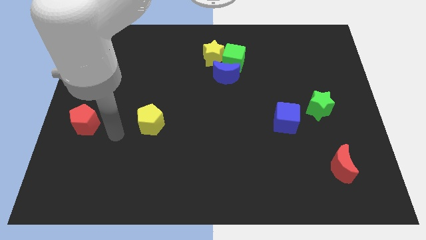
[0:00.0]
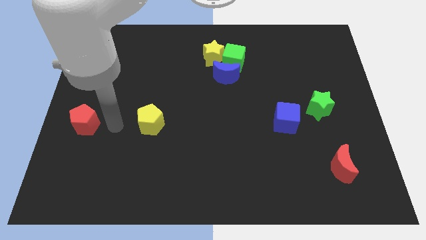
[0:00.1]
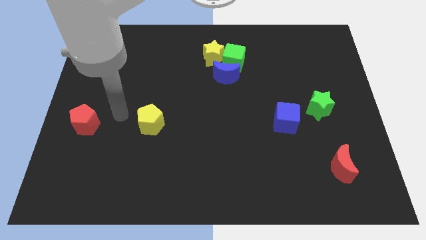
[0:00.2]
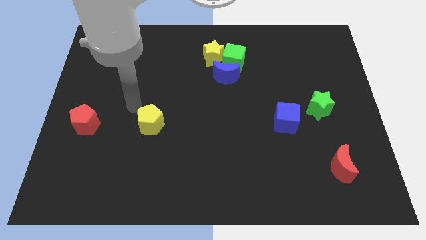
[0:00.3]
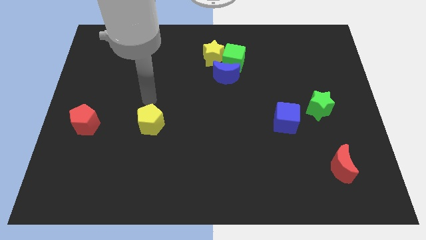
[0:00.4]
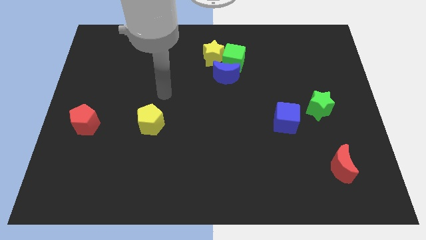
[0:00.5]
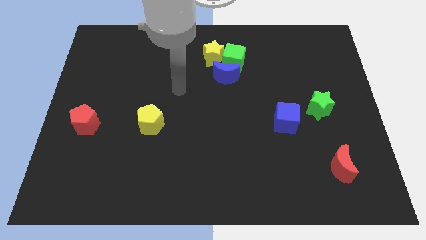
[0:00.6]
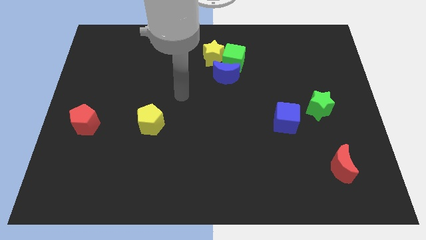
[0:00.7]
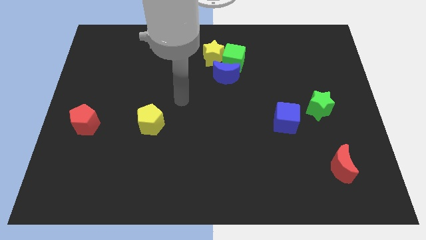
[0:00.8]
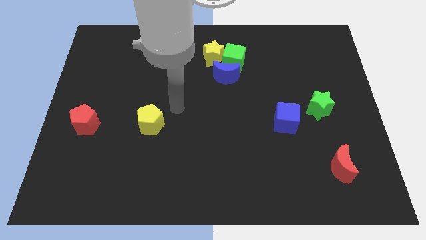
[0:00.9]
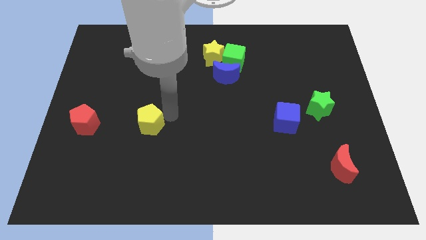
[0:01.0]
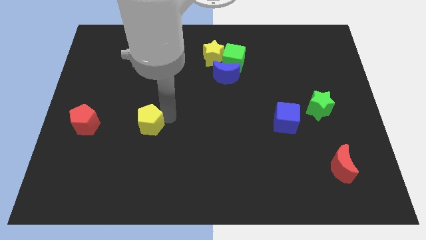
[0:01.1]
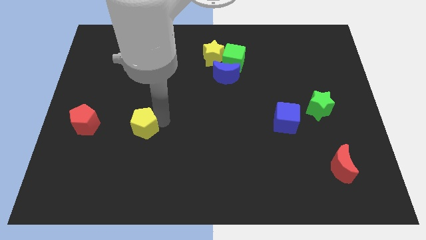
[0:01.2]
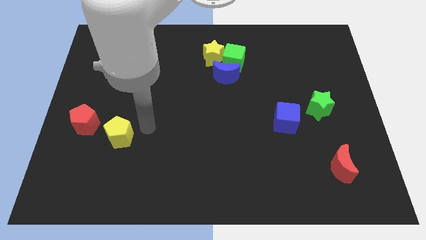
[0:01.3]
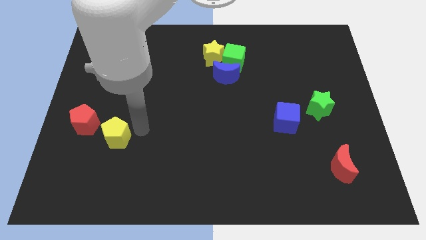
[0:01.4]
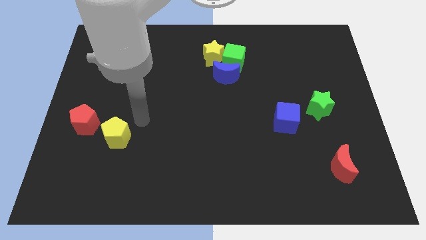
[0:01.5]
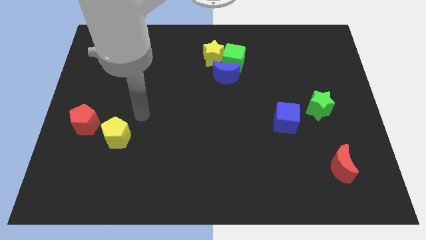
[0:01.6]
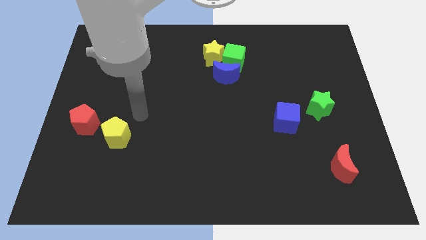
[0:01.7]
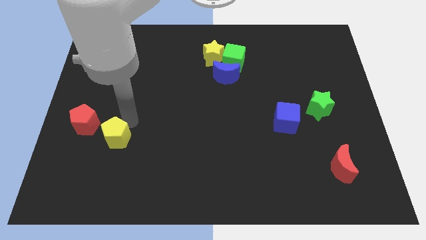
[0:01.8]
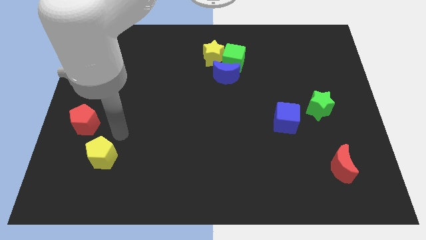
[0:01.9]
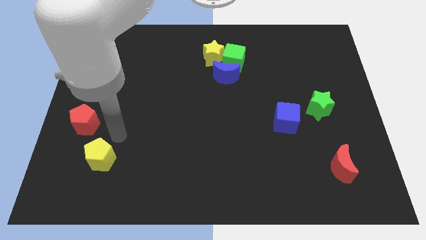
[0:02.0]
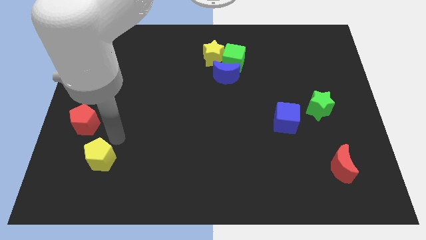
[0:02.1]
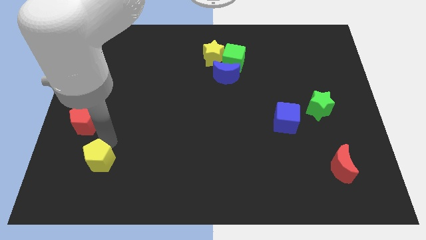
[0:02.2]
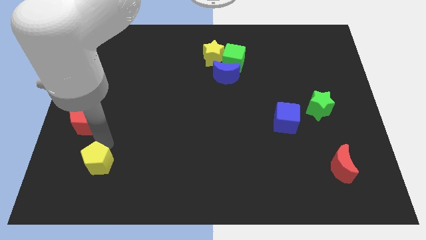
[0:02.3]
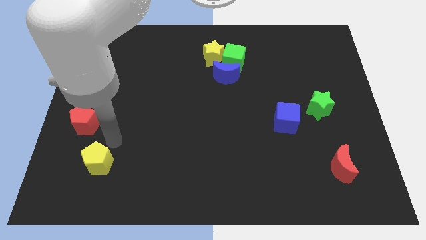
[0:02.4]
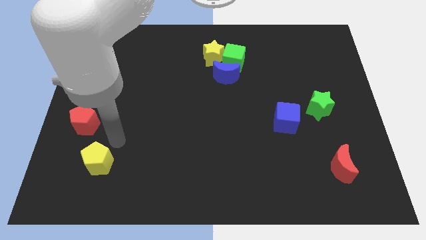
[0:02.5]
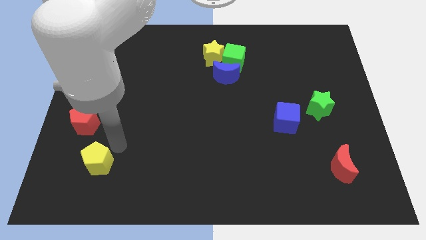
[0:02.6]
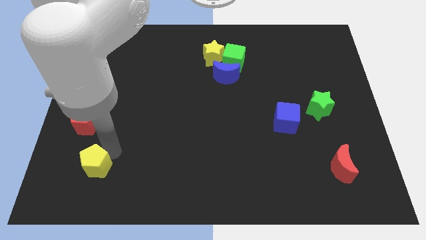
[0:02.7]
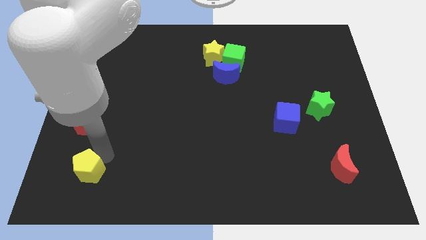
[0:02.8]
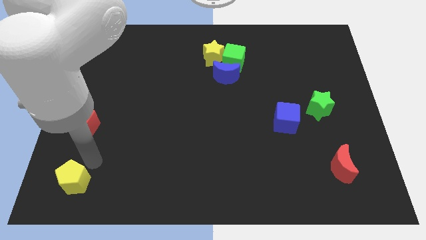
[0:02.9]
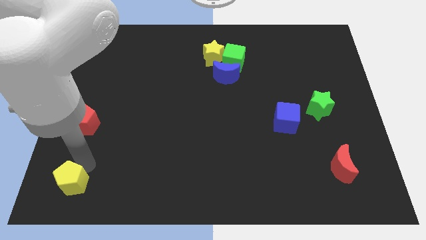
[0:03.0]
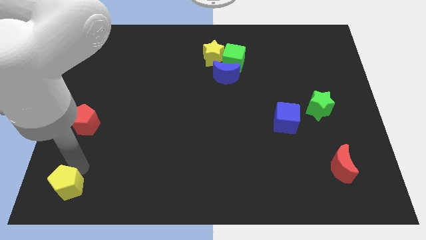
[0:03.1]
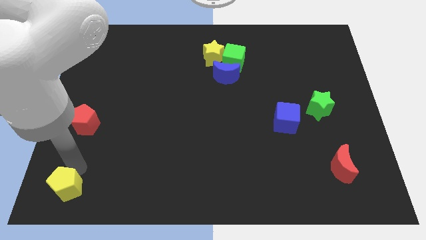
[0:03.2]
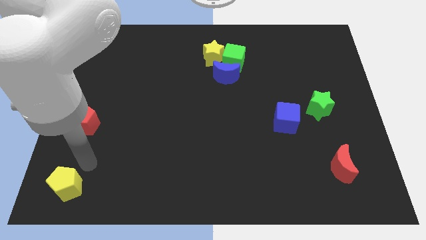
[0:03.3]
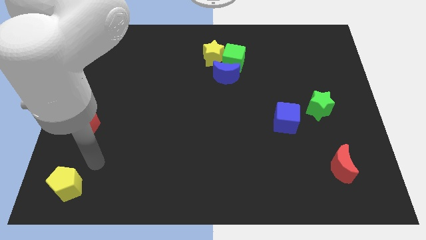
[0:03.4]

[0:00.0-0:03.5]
move the yellow pentagon to the bottom left side of the board

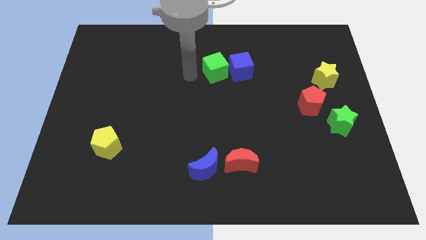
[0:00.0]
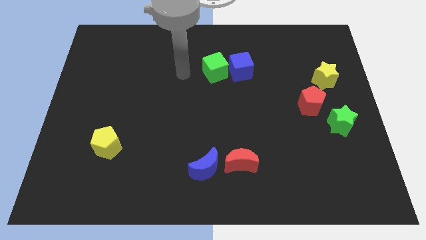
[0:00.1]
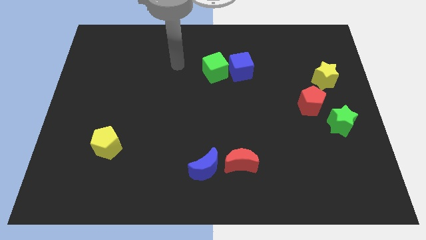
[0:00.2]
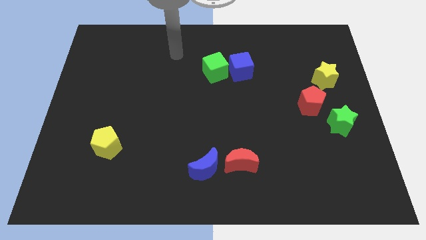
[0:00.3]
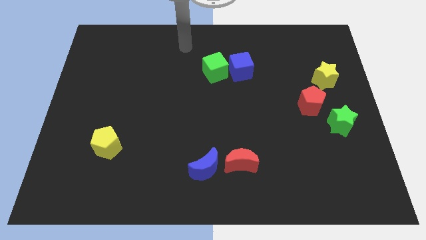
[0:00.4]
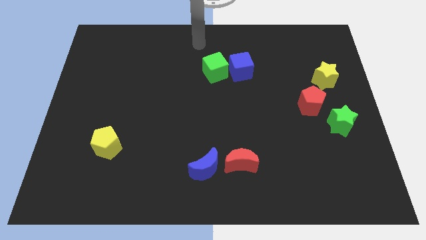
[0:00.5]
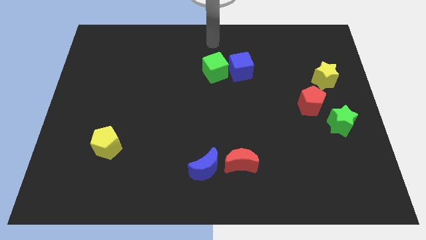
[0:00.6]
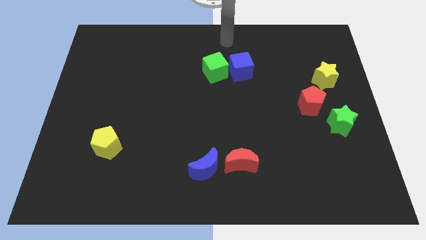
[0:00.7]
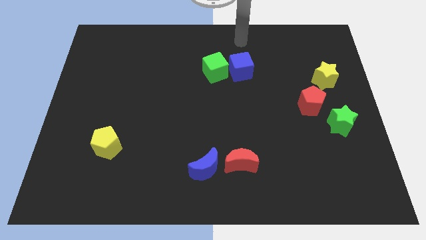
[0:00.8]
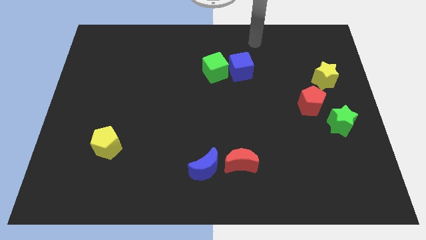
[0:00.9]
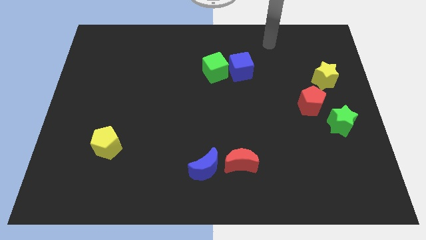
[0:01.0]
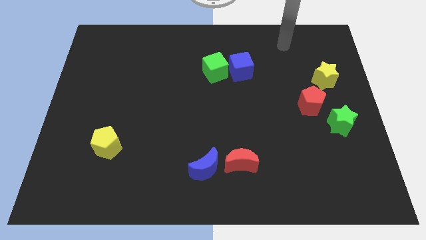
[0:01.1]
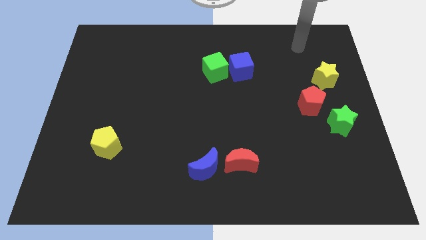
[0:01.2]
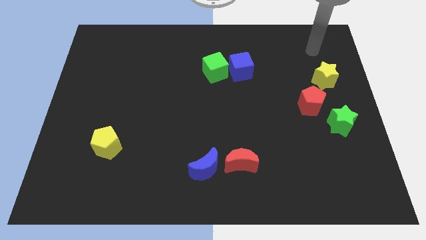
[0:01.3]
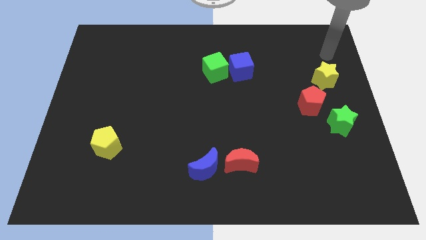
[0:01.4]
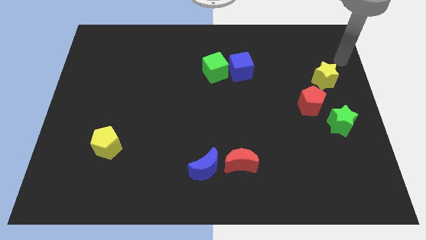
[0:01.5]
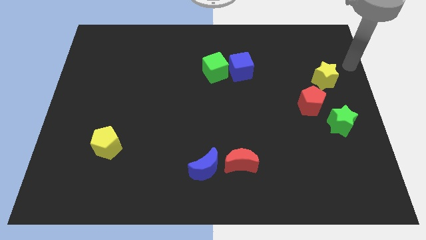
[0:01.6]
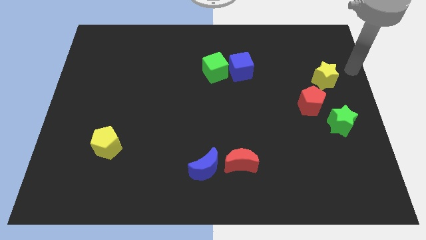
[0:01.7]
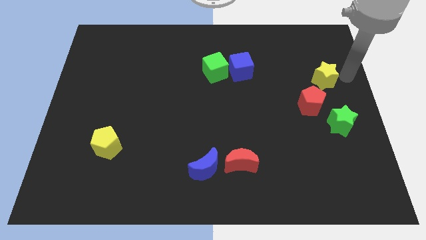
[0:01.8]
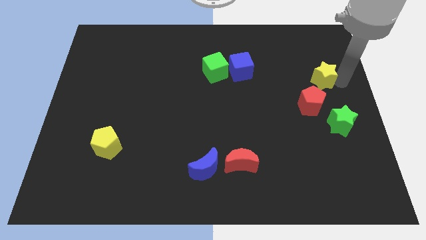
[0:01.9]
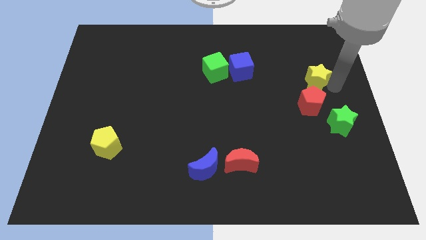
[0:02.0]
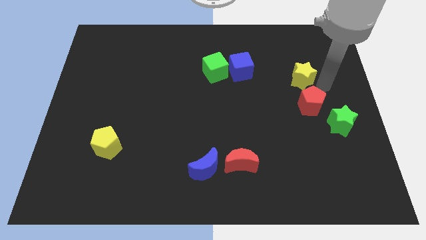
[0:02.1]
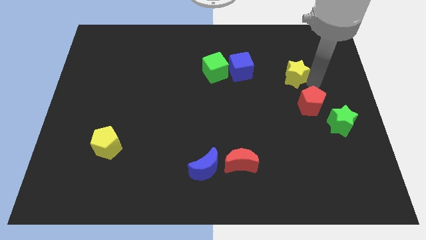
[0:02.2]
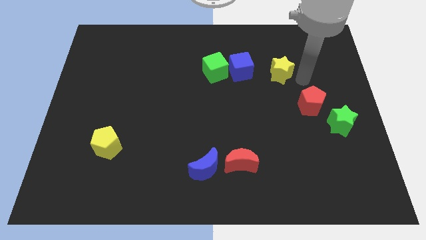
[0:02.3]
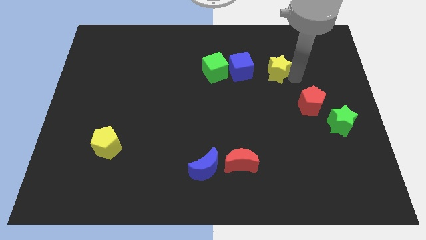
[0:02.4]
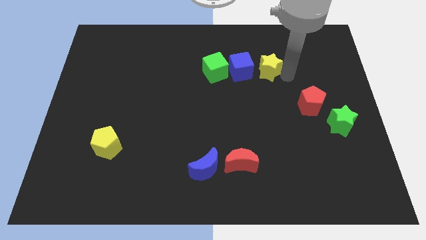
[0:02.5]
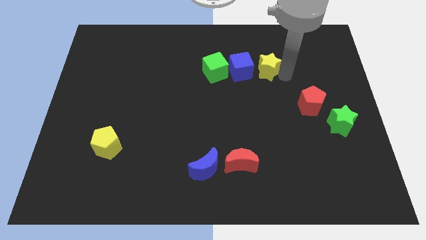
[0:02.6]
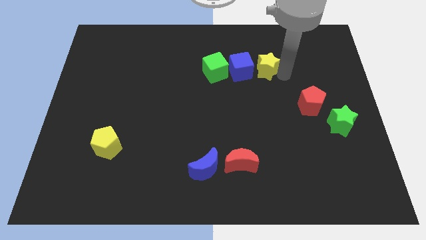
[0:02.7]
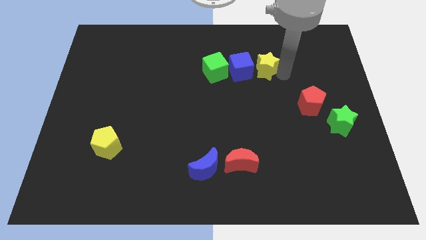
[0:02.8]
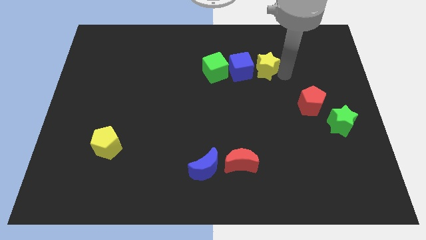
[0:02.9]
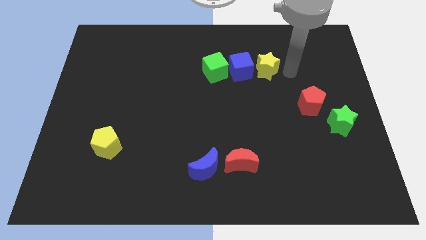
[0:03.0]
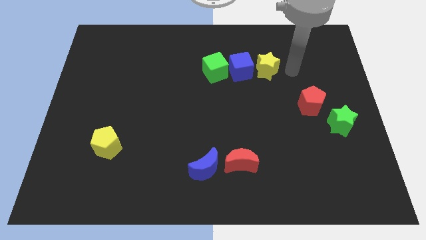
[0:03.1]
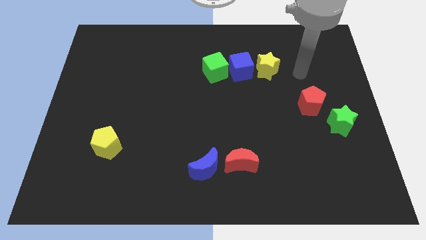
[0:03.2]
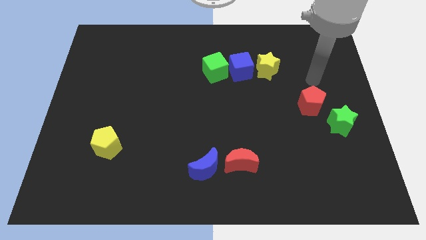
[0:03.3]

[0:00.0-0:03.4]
push the yellow star right to the blue cube

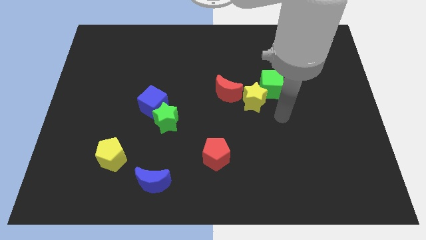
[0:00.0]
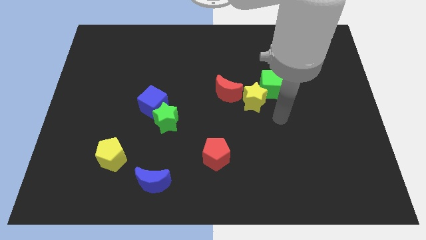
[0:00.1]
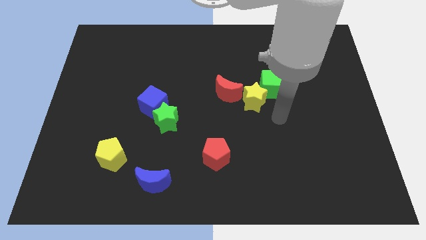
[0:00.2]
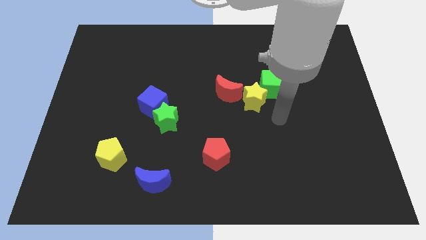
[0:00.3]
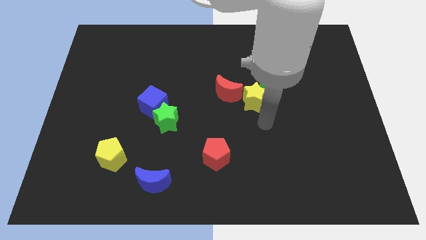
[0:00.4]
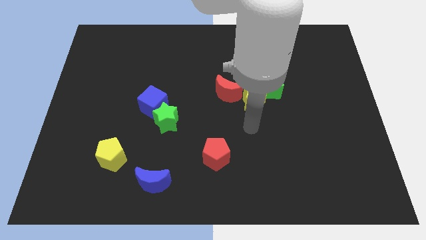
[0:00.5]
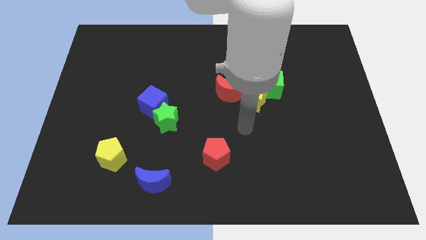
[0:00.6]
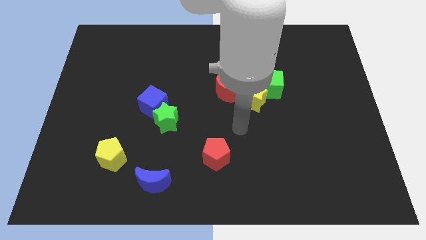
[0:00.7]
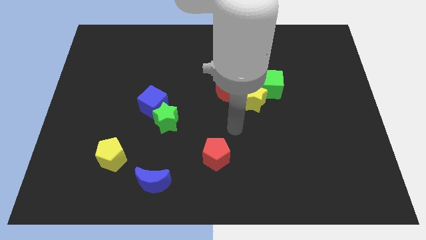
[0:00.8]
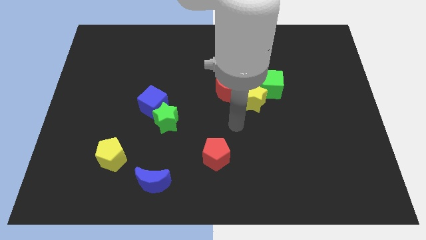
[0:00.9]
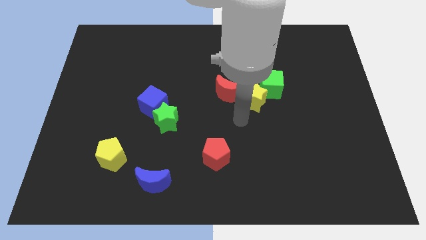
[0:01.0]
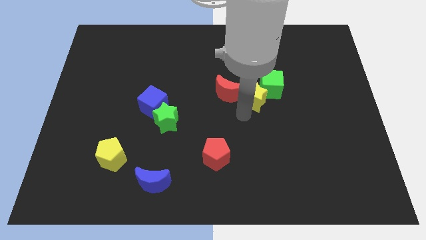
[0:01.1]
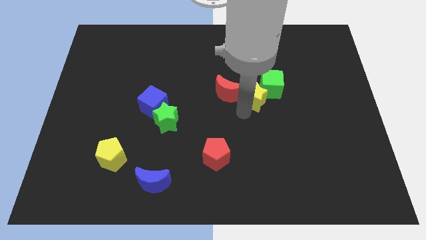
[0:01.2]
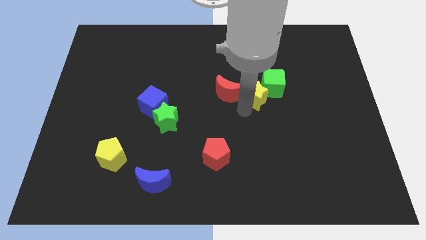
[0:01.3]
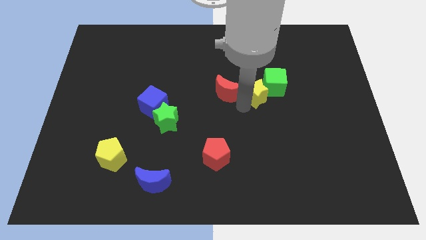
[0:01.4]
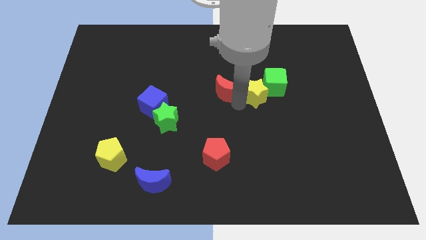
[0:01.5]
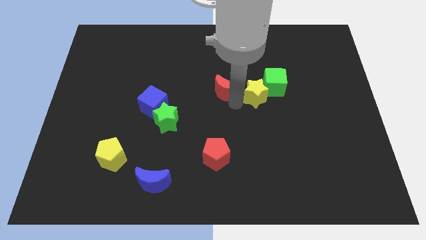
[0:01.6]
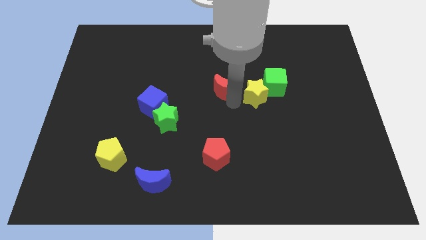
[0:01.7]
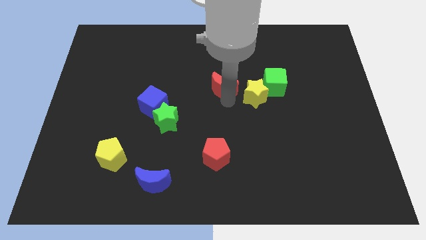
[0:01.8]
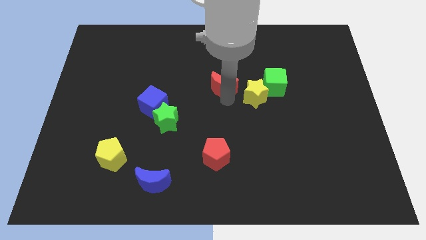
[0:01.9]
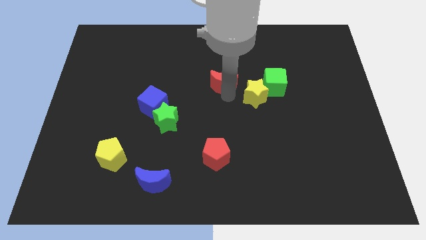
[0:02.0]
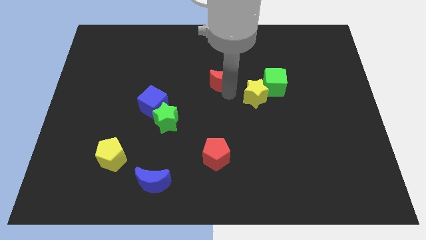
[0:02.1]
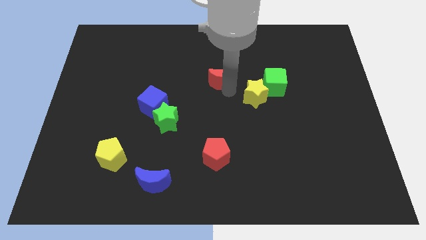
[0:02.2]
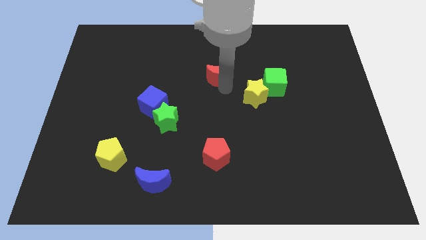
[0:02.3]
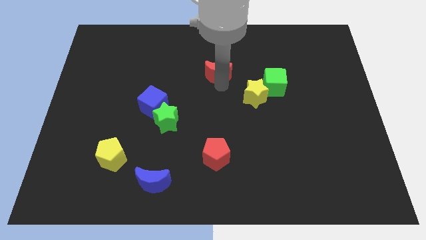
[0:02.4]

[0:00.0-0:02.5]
move the red crescent away from the yellow star
